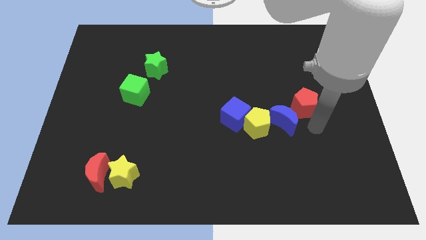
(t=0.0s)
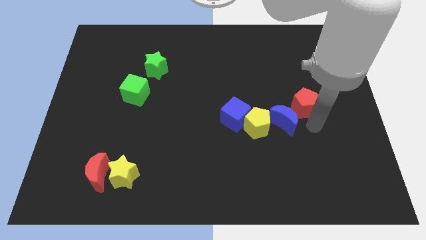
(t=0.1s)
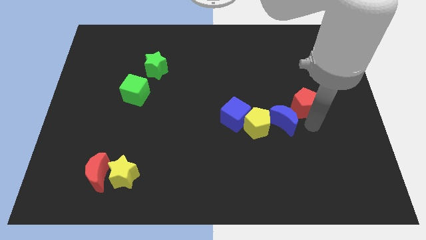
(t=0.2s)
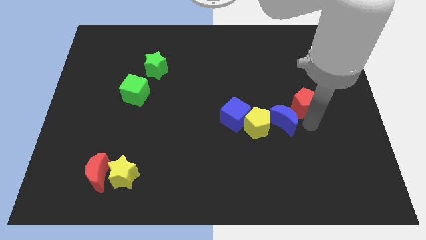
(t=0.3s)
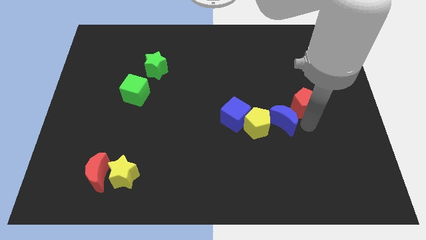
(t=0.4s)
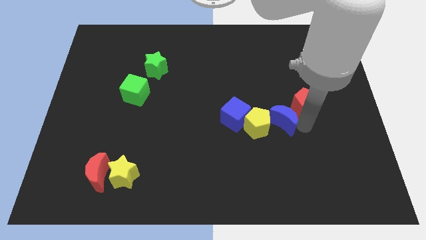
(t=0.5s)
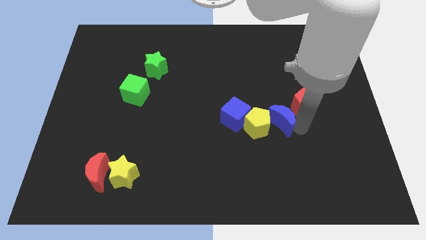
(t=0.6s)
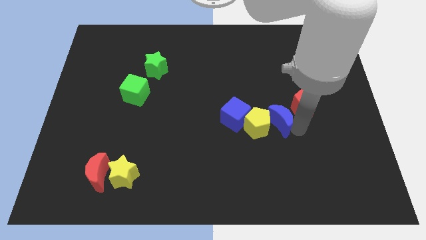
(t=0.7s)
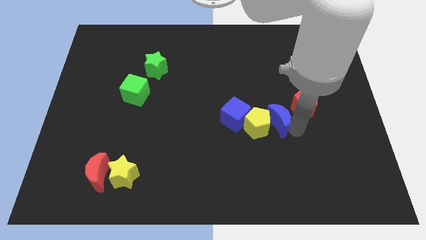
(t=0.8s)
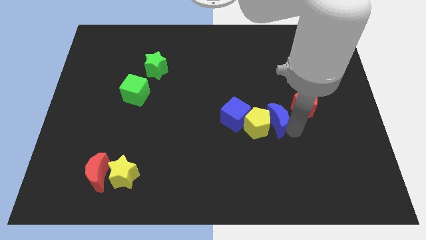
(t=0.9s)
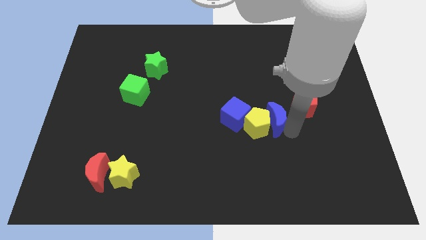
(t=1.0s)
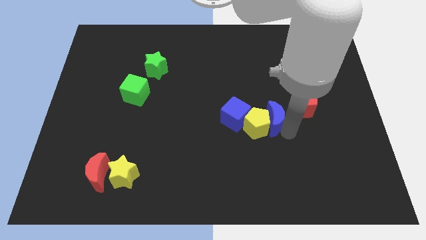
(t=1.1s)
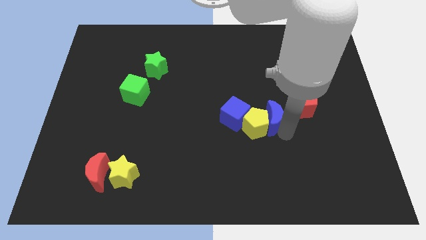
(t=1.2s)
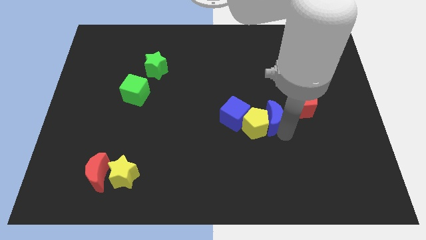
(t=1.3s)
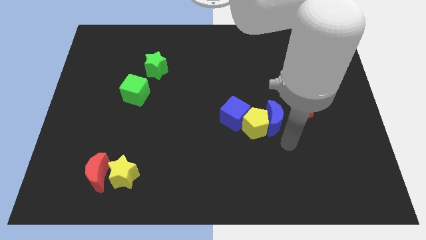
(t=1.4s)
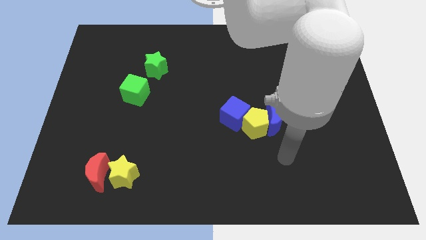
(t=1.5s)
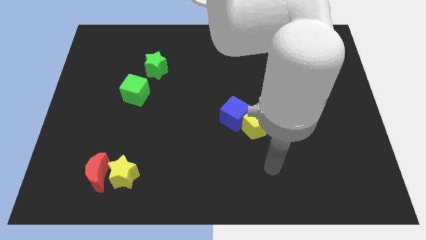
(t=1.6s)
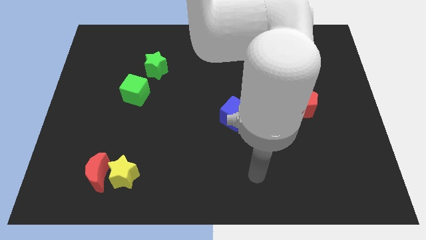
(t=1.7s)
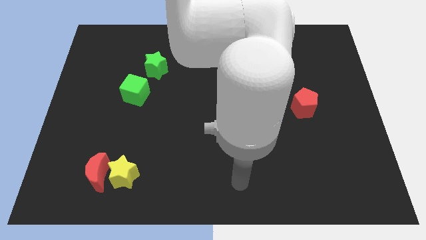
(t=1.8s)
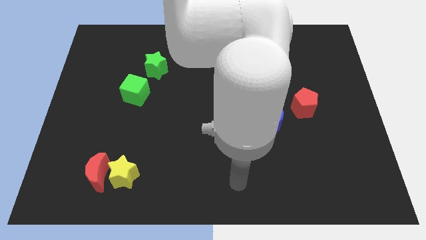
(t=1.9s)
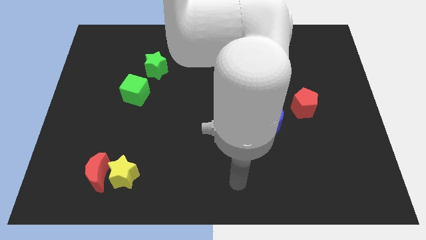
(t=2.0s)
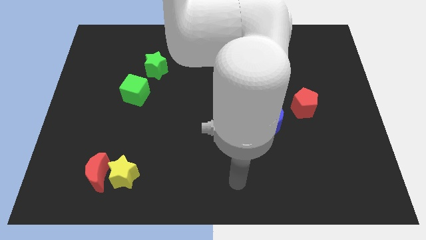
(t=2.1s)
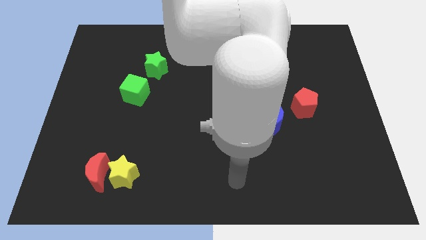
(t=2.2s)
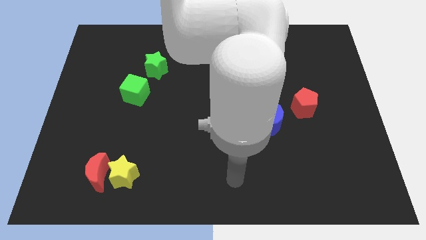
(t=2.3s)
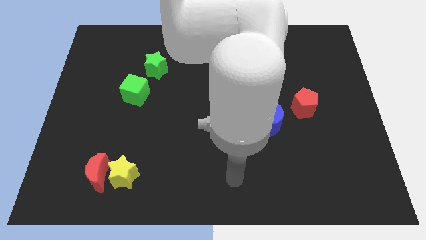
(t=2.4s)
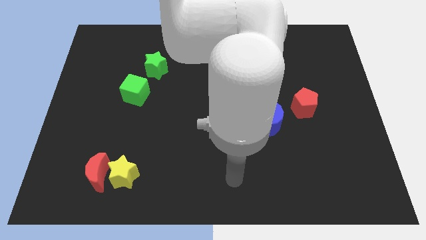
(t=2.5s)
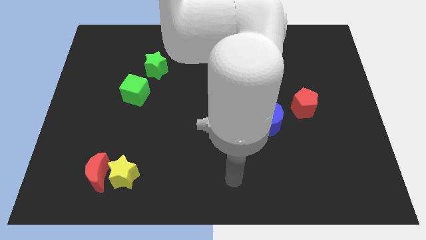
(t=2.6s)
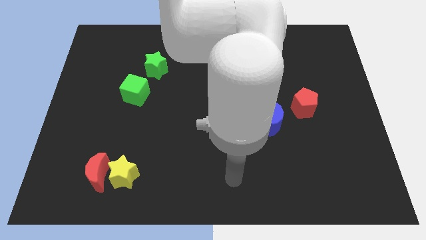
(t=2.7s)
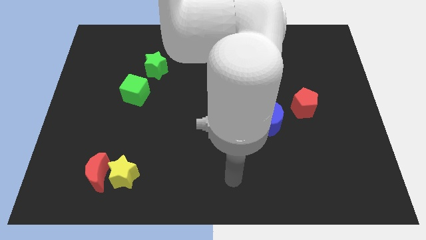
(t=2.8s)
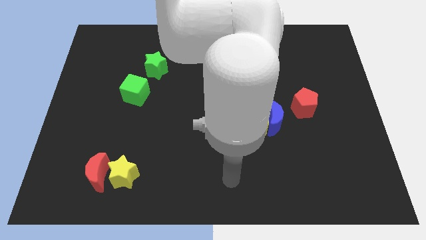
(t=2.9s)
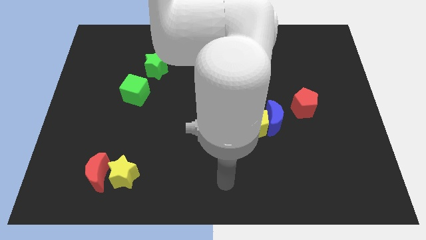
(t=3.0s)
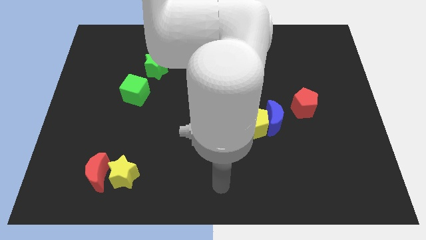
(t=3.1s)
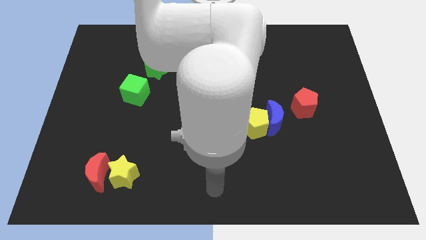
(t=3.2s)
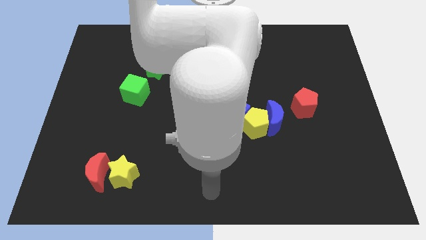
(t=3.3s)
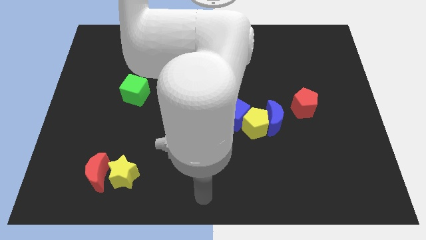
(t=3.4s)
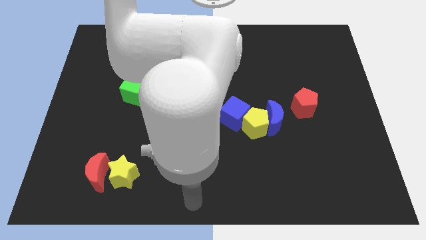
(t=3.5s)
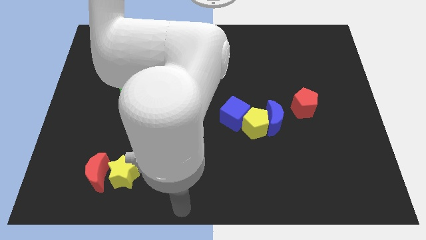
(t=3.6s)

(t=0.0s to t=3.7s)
slightly push the blue crescent towards the yellow pentagon

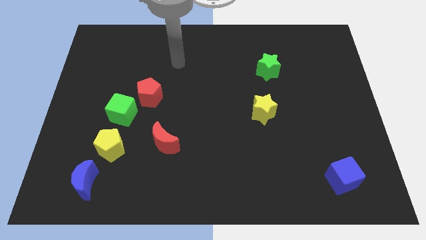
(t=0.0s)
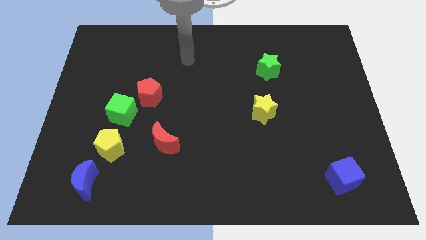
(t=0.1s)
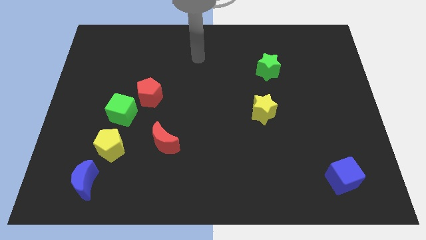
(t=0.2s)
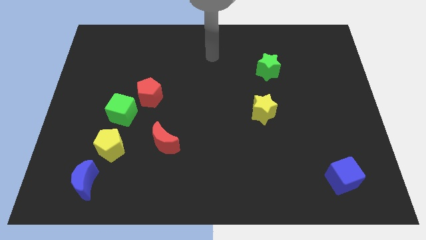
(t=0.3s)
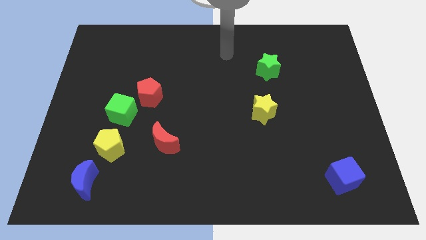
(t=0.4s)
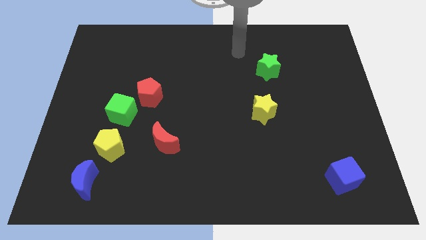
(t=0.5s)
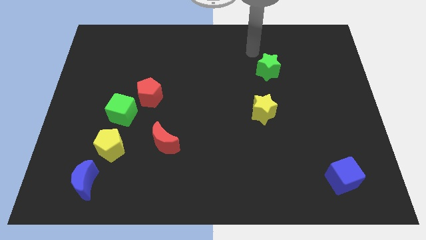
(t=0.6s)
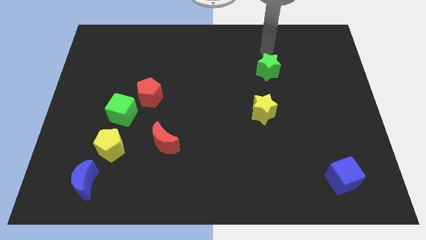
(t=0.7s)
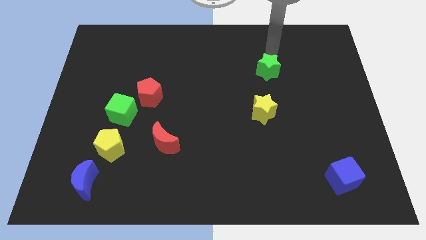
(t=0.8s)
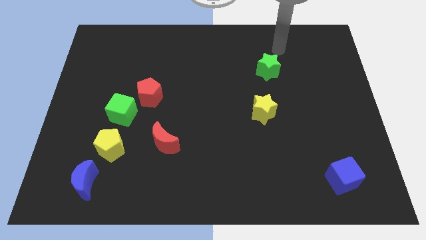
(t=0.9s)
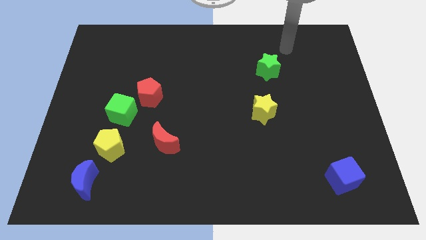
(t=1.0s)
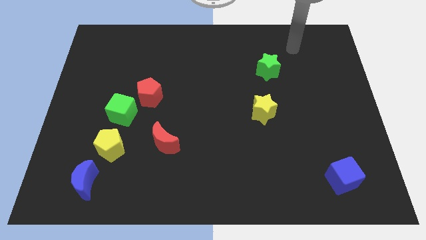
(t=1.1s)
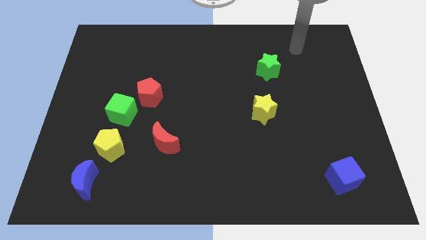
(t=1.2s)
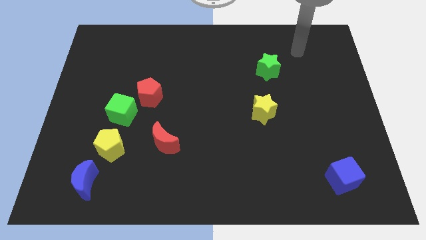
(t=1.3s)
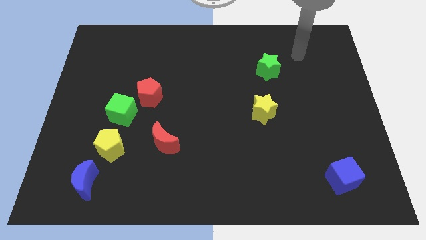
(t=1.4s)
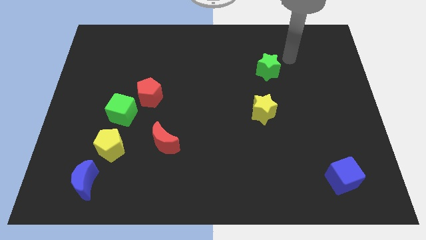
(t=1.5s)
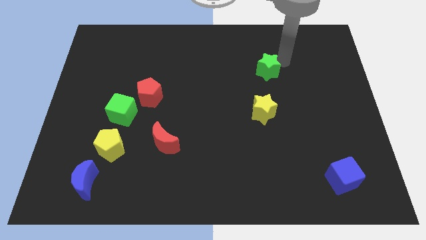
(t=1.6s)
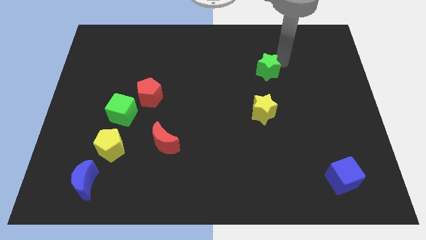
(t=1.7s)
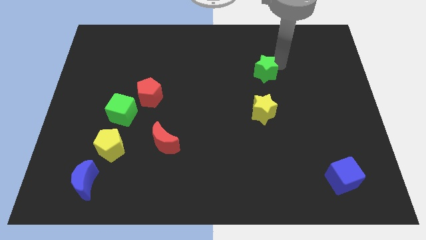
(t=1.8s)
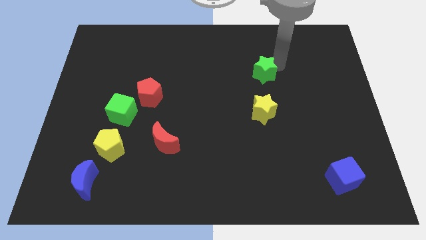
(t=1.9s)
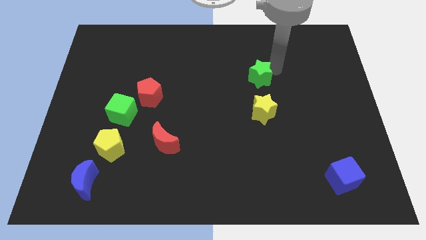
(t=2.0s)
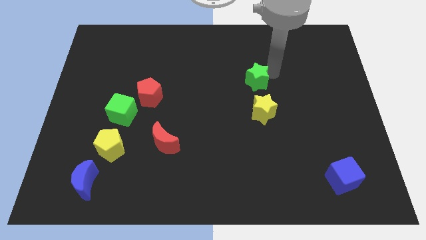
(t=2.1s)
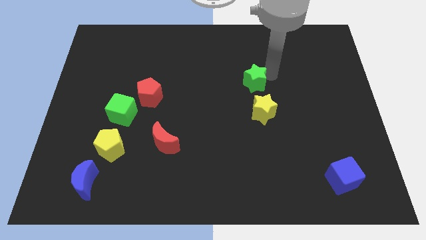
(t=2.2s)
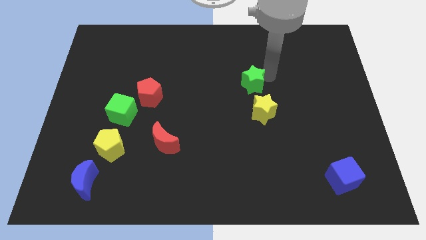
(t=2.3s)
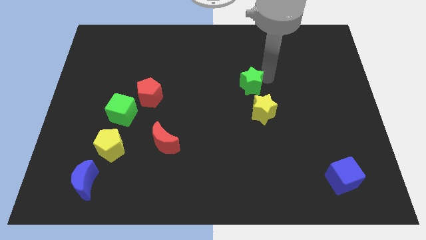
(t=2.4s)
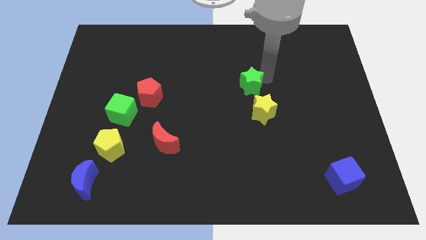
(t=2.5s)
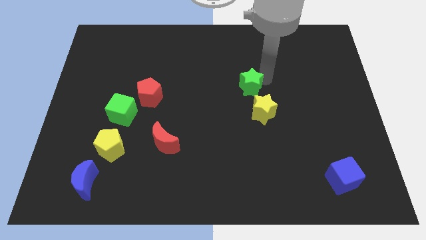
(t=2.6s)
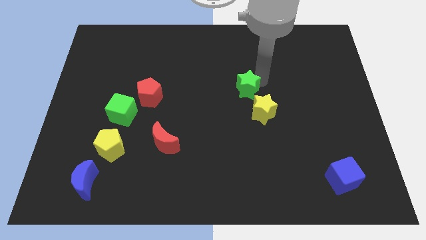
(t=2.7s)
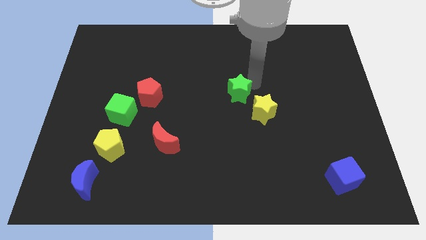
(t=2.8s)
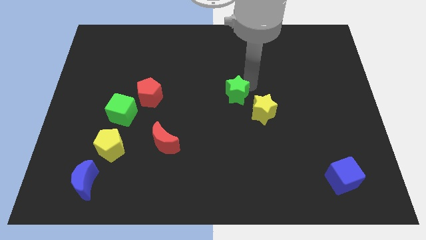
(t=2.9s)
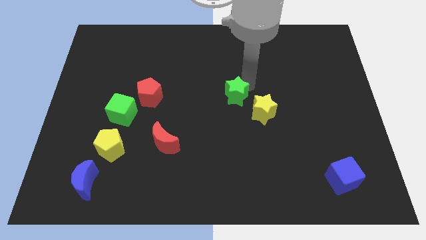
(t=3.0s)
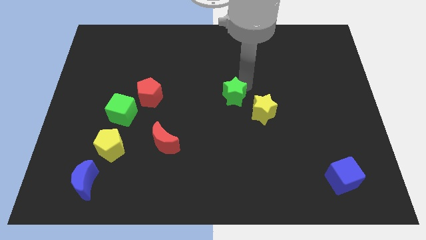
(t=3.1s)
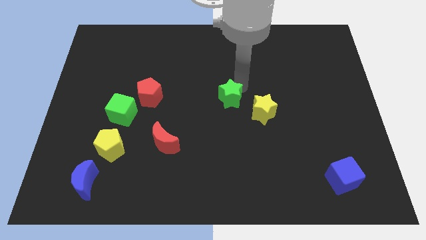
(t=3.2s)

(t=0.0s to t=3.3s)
push the green star to the center

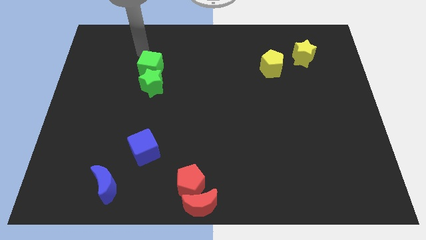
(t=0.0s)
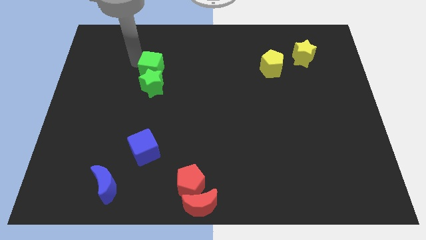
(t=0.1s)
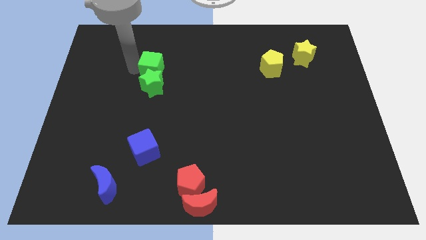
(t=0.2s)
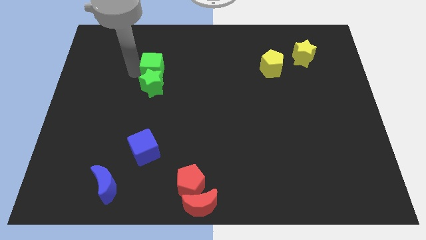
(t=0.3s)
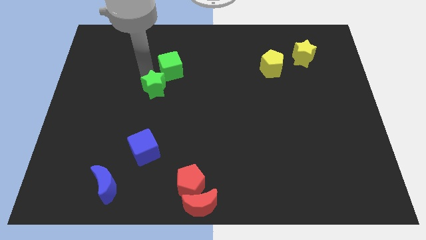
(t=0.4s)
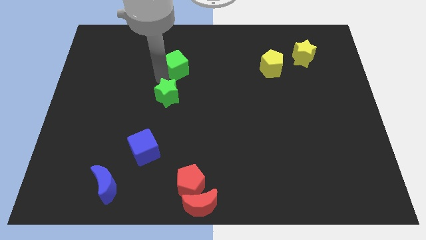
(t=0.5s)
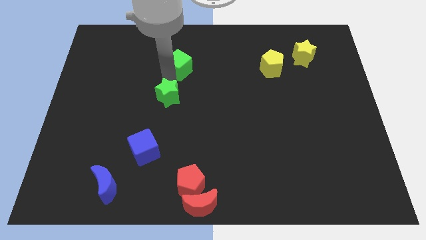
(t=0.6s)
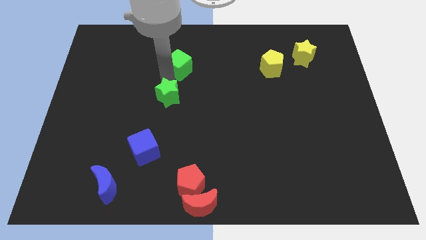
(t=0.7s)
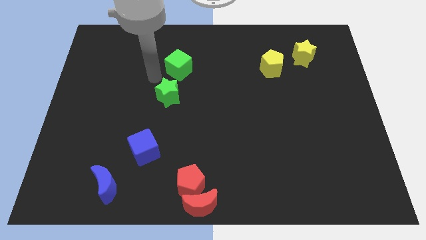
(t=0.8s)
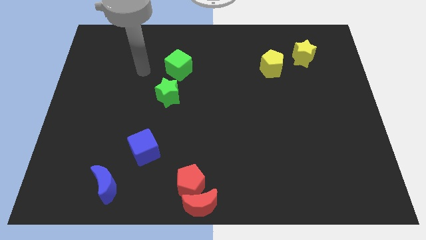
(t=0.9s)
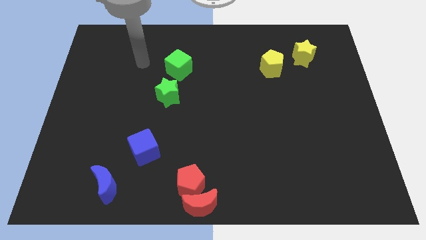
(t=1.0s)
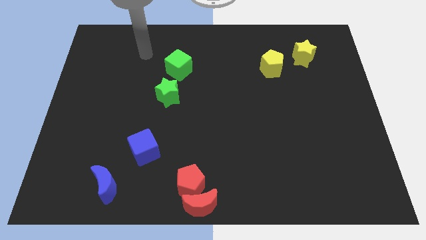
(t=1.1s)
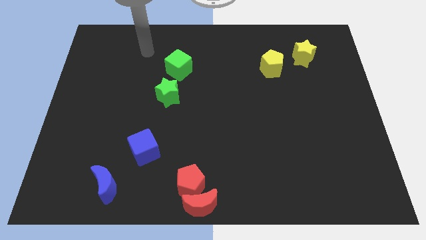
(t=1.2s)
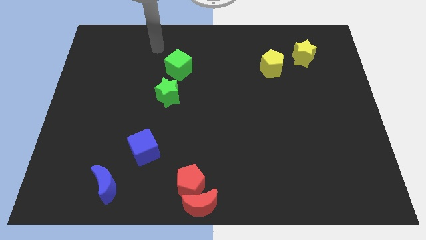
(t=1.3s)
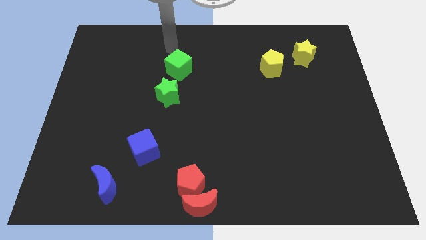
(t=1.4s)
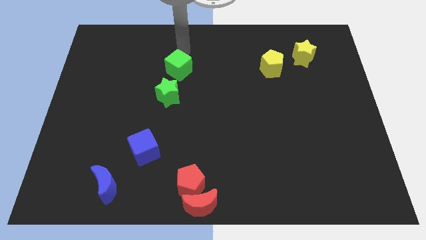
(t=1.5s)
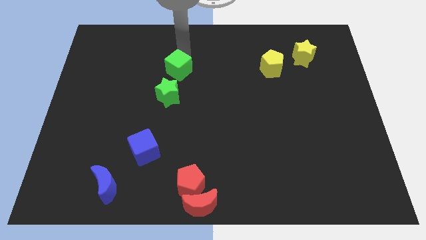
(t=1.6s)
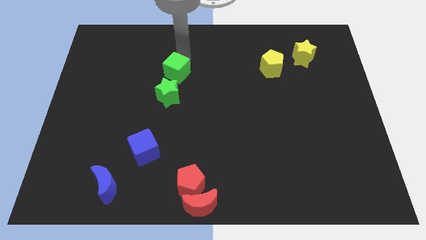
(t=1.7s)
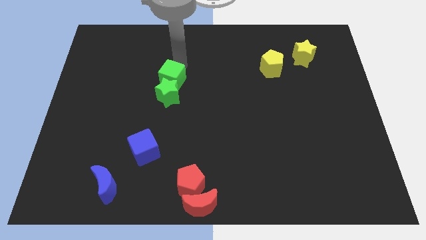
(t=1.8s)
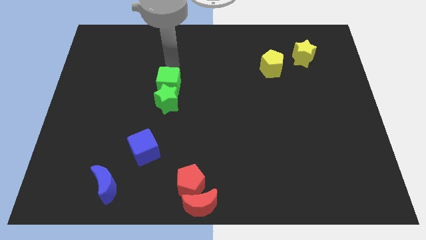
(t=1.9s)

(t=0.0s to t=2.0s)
push both green star and green cube towards bottom
